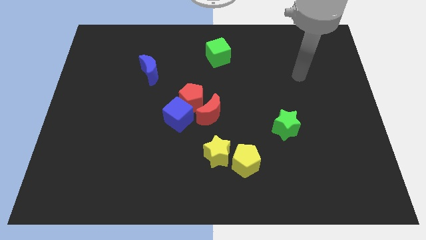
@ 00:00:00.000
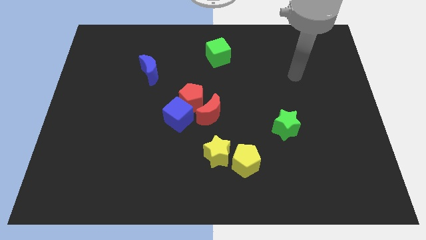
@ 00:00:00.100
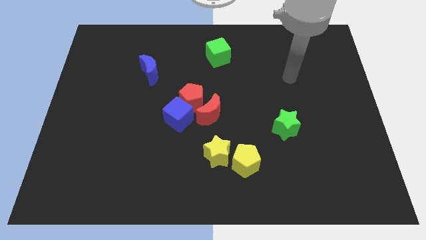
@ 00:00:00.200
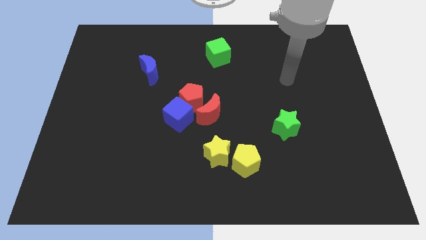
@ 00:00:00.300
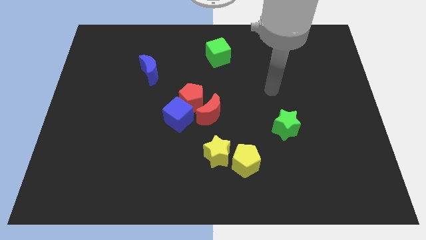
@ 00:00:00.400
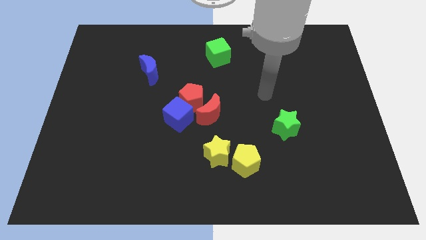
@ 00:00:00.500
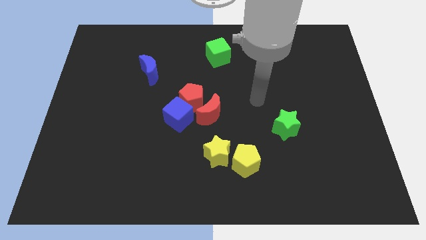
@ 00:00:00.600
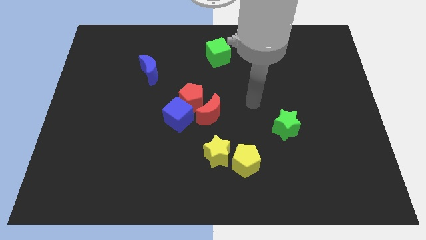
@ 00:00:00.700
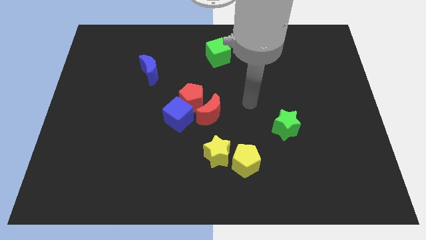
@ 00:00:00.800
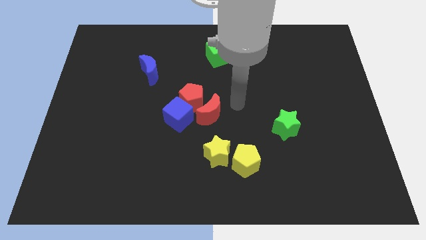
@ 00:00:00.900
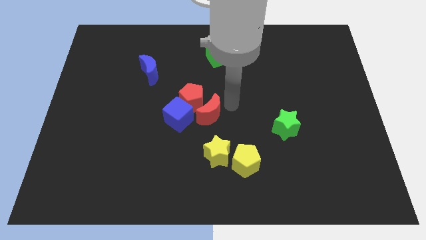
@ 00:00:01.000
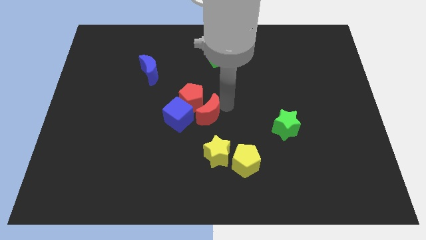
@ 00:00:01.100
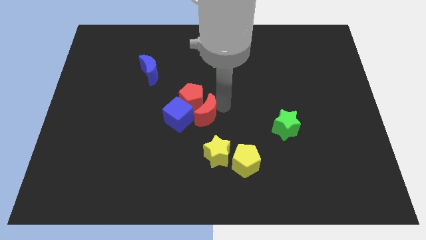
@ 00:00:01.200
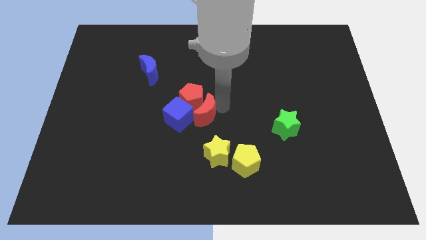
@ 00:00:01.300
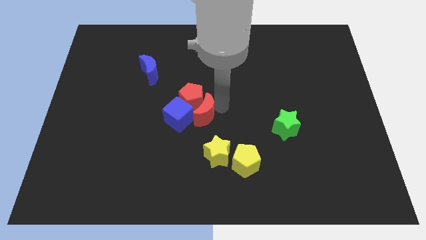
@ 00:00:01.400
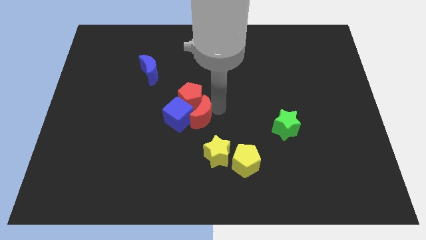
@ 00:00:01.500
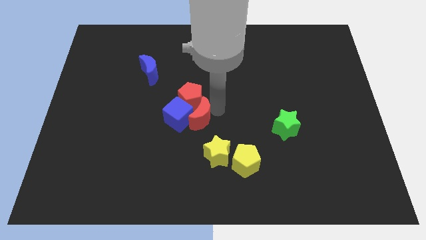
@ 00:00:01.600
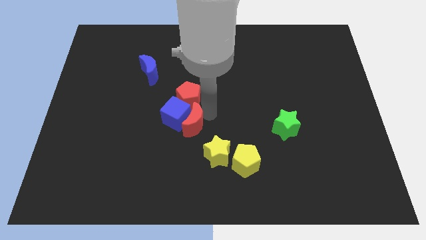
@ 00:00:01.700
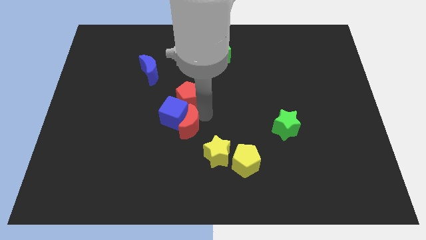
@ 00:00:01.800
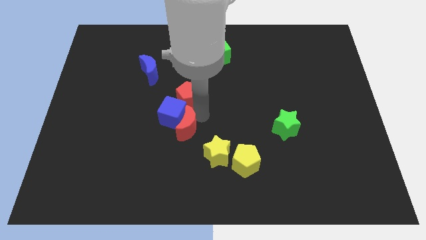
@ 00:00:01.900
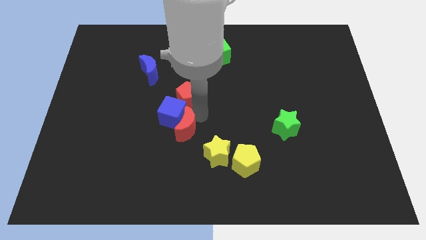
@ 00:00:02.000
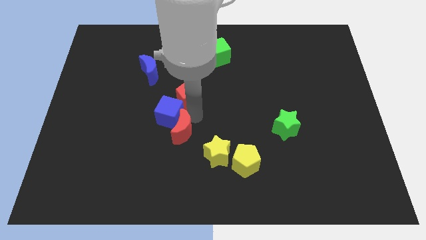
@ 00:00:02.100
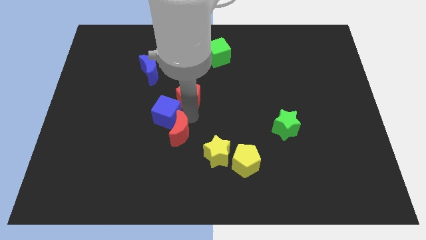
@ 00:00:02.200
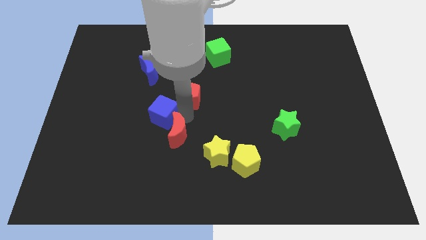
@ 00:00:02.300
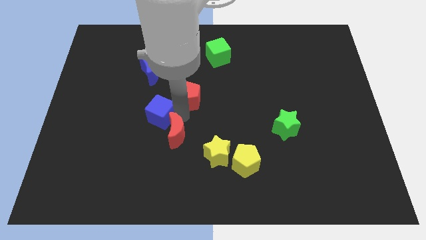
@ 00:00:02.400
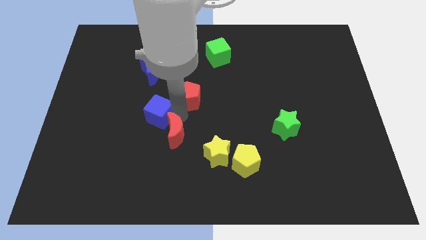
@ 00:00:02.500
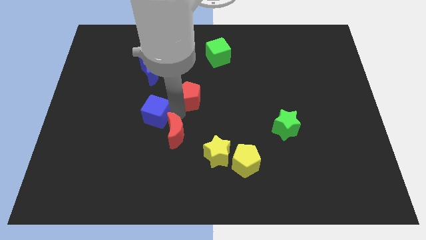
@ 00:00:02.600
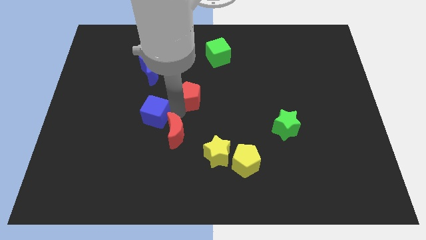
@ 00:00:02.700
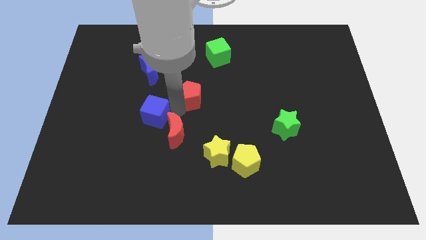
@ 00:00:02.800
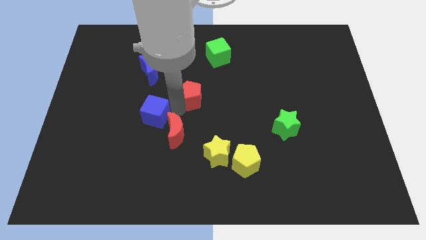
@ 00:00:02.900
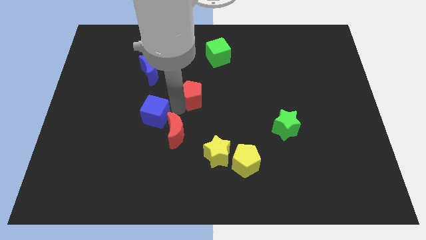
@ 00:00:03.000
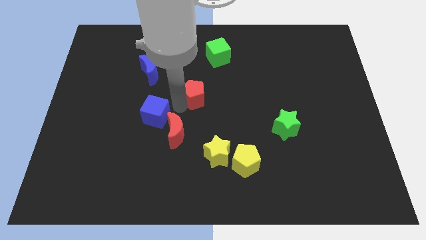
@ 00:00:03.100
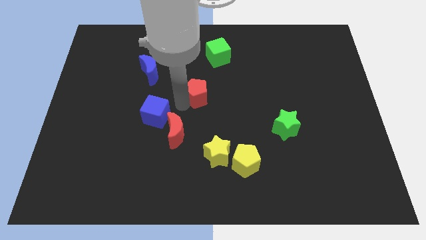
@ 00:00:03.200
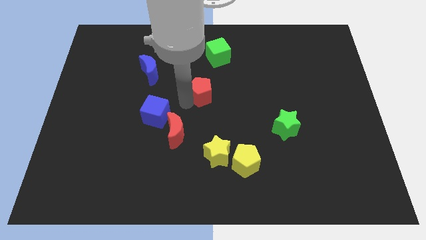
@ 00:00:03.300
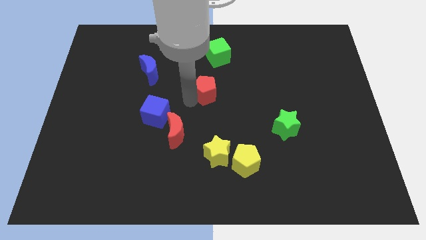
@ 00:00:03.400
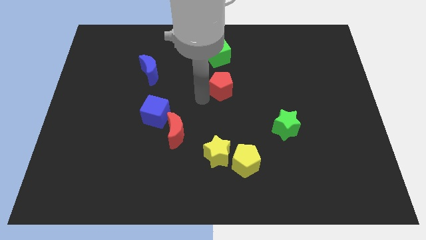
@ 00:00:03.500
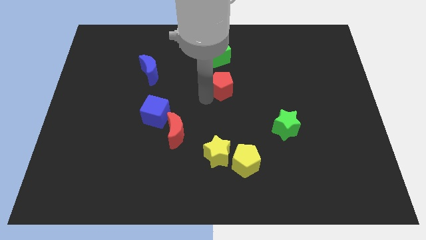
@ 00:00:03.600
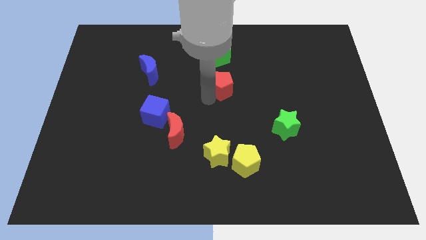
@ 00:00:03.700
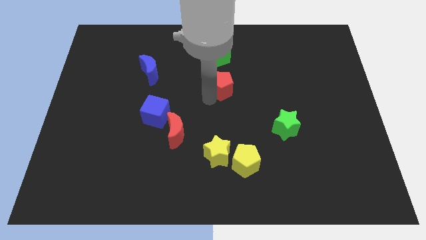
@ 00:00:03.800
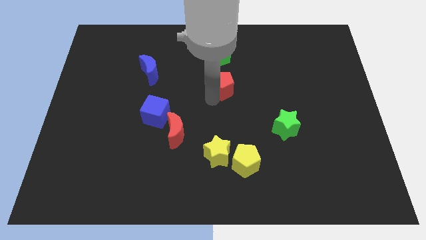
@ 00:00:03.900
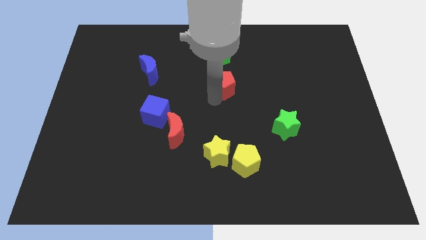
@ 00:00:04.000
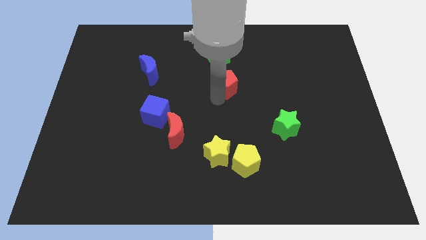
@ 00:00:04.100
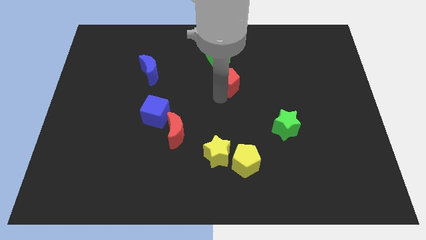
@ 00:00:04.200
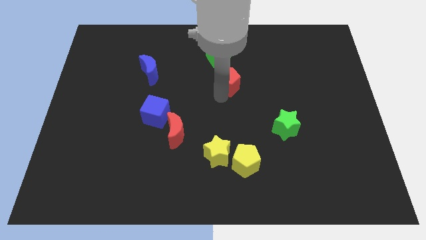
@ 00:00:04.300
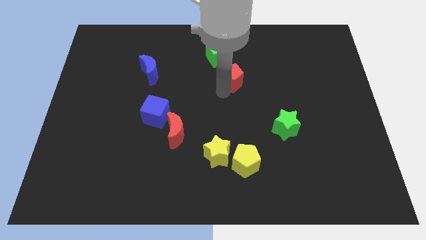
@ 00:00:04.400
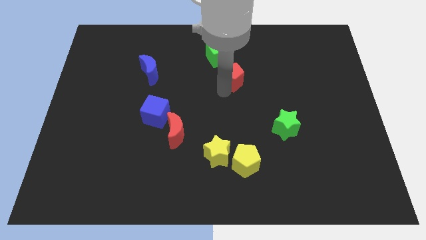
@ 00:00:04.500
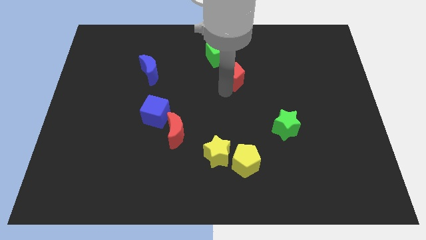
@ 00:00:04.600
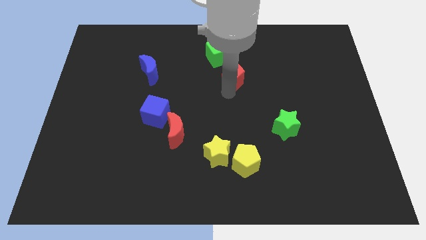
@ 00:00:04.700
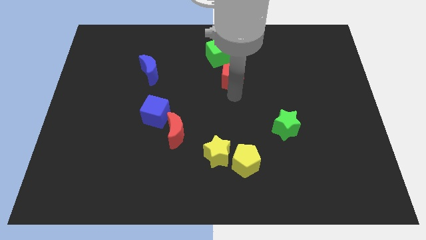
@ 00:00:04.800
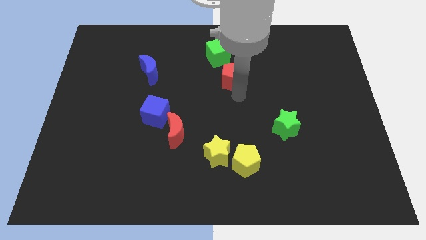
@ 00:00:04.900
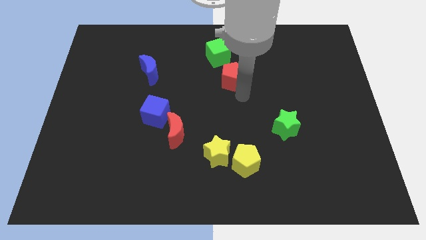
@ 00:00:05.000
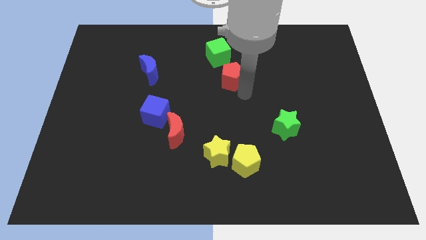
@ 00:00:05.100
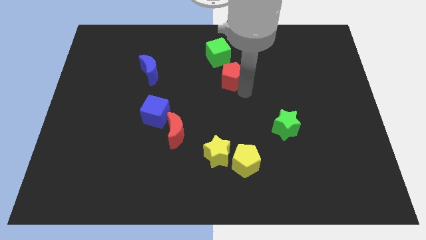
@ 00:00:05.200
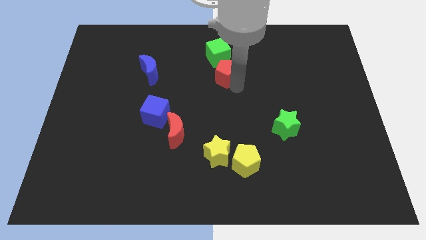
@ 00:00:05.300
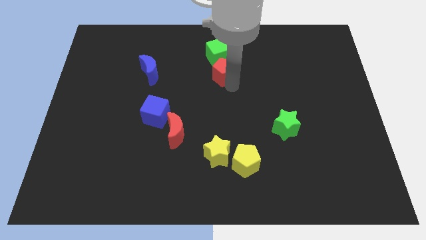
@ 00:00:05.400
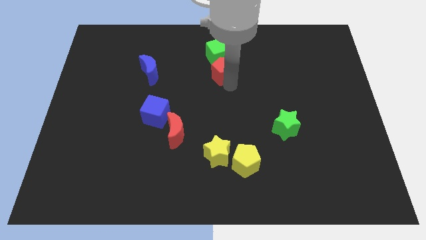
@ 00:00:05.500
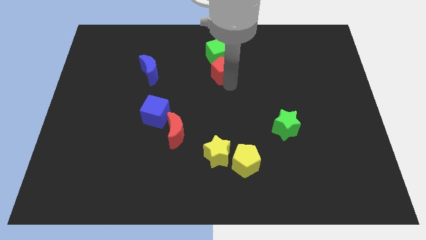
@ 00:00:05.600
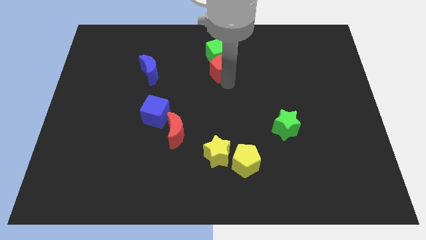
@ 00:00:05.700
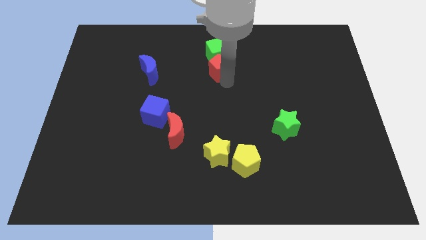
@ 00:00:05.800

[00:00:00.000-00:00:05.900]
move the red pentagon close to the green cube

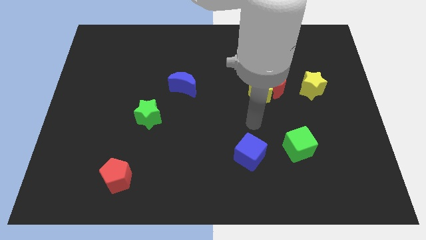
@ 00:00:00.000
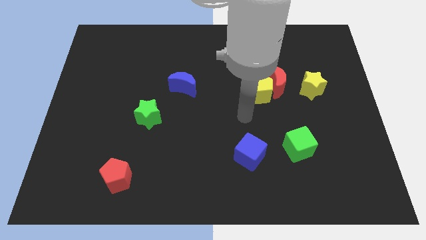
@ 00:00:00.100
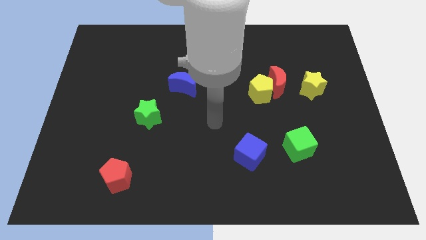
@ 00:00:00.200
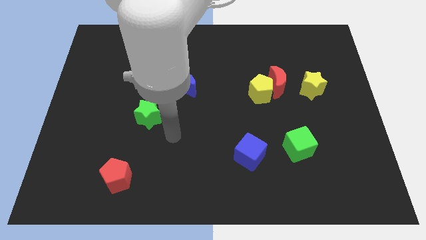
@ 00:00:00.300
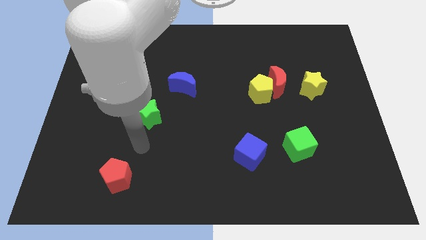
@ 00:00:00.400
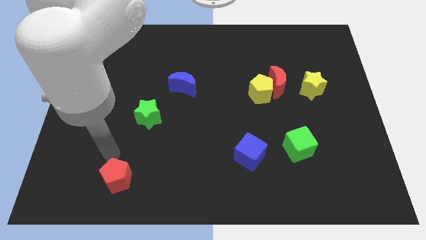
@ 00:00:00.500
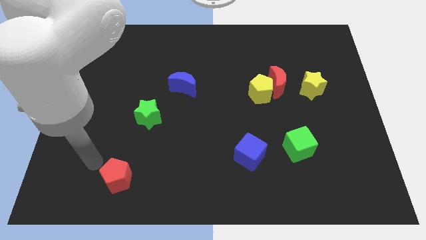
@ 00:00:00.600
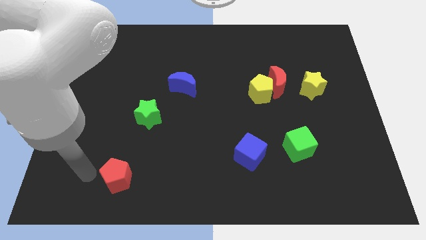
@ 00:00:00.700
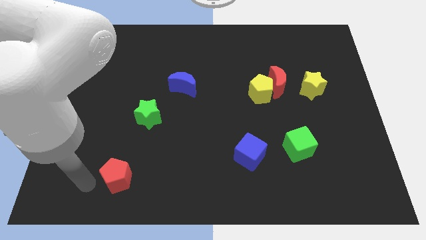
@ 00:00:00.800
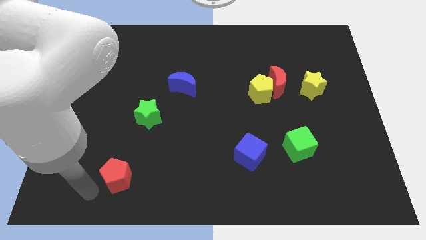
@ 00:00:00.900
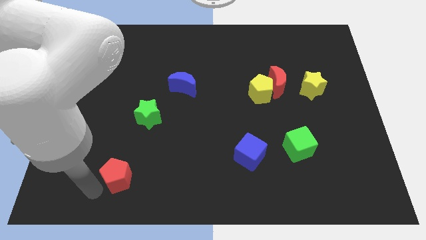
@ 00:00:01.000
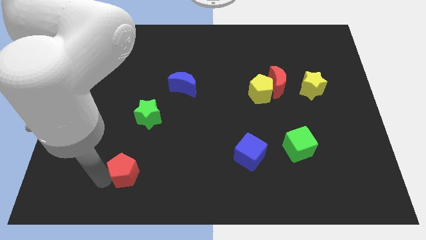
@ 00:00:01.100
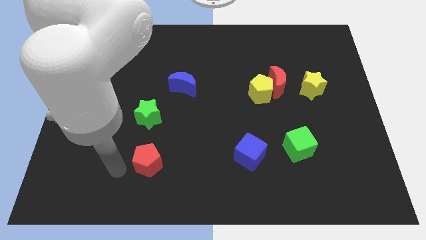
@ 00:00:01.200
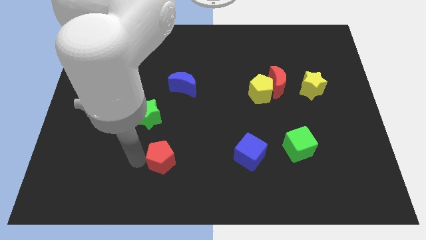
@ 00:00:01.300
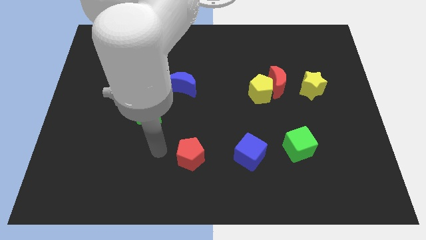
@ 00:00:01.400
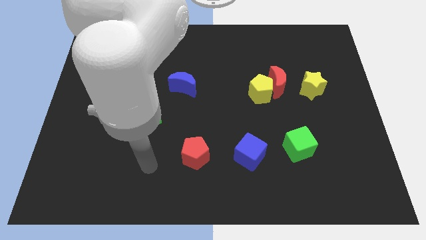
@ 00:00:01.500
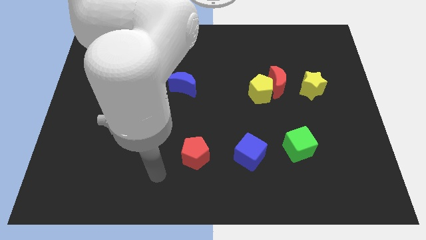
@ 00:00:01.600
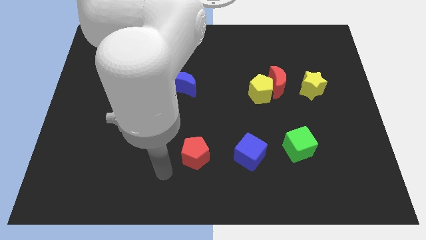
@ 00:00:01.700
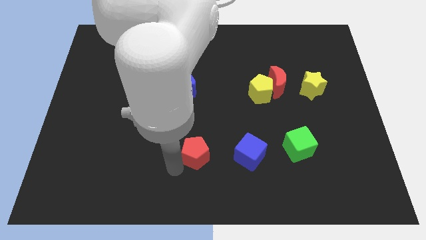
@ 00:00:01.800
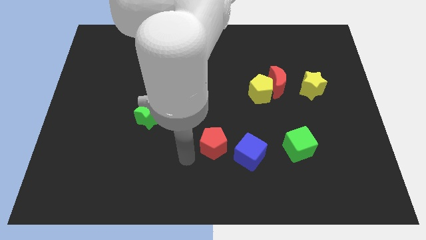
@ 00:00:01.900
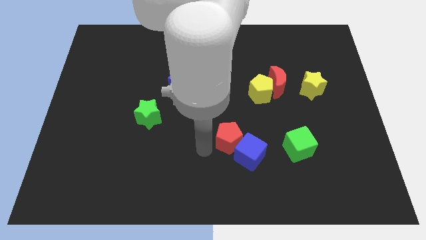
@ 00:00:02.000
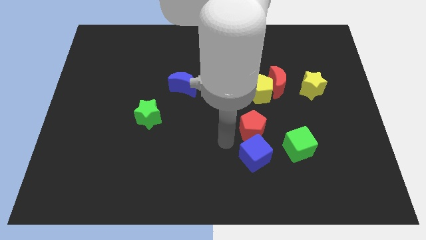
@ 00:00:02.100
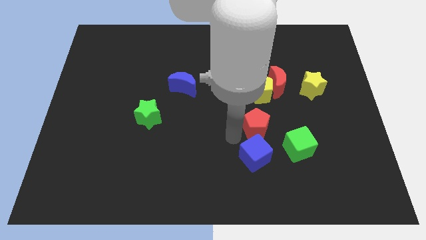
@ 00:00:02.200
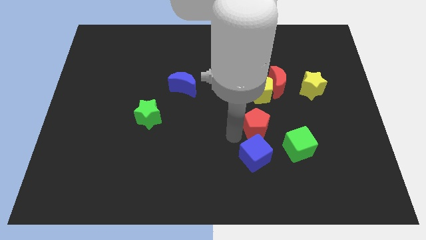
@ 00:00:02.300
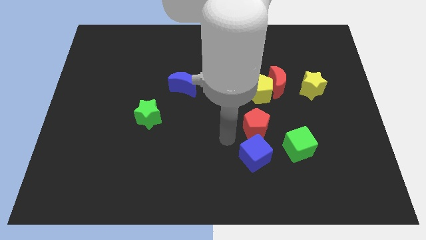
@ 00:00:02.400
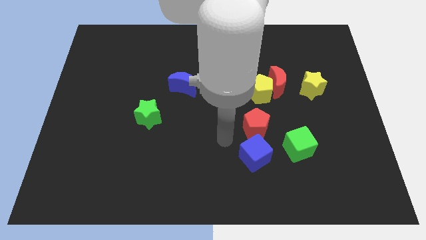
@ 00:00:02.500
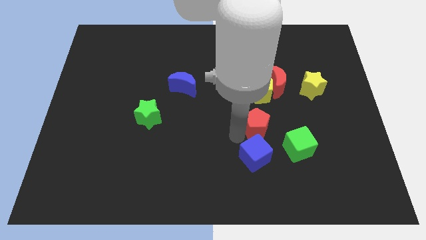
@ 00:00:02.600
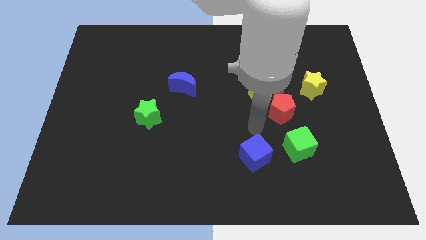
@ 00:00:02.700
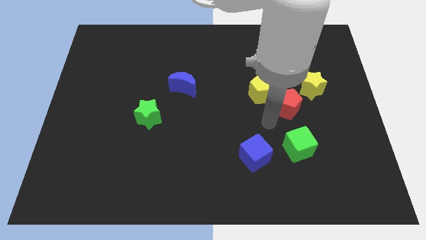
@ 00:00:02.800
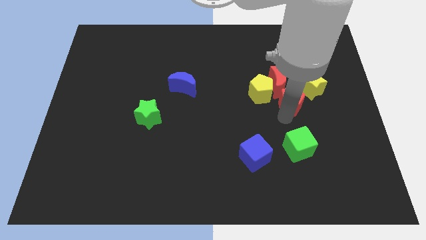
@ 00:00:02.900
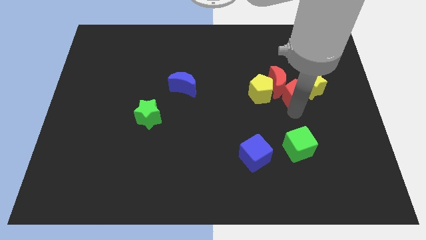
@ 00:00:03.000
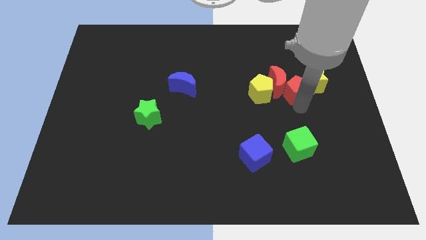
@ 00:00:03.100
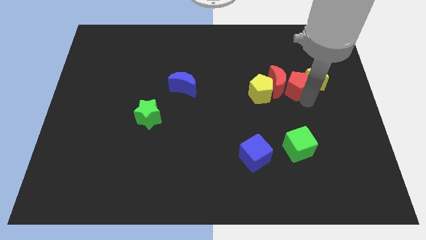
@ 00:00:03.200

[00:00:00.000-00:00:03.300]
put the red pentagon to the yellow star
